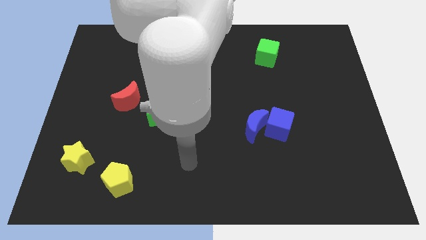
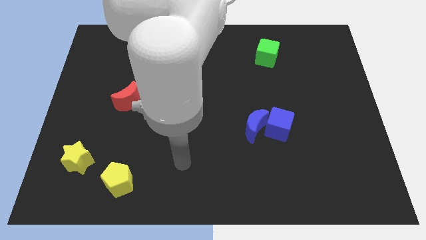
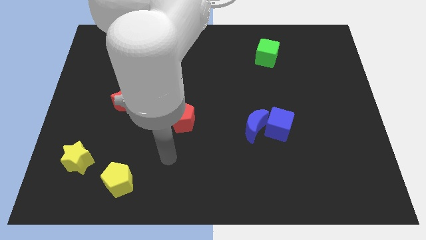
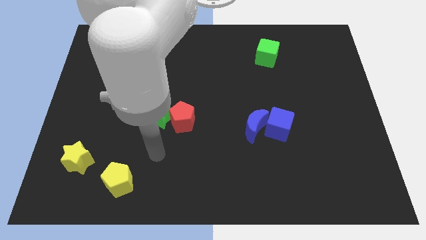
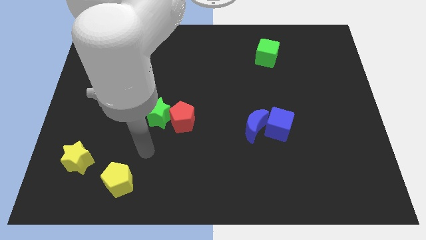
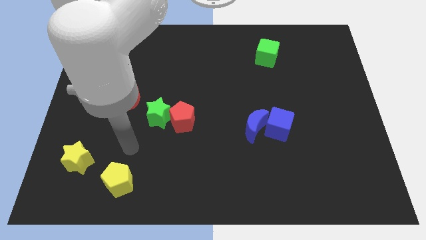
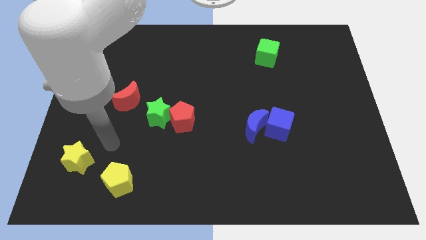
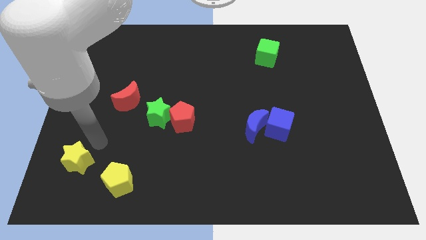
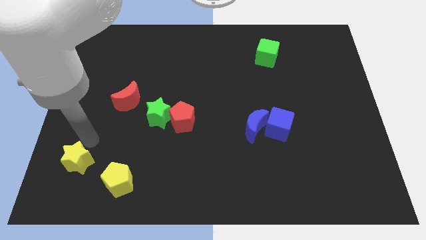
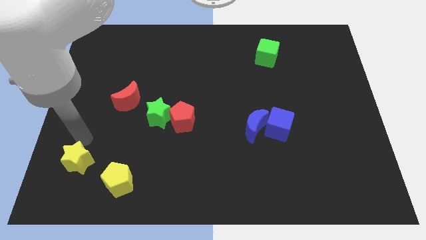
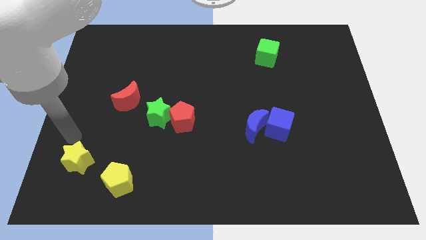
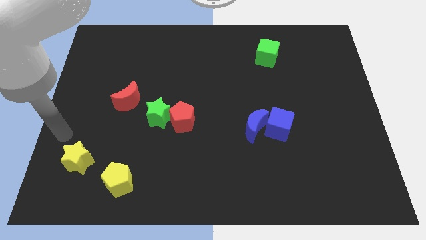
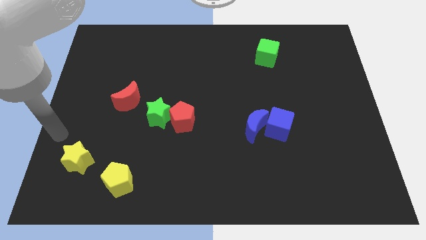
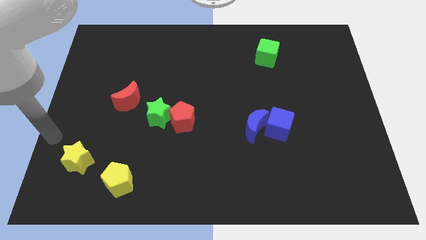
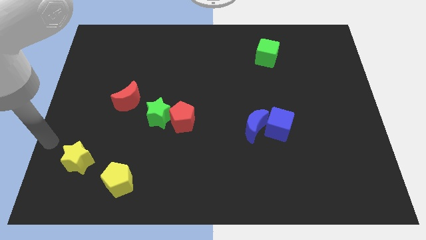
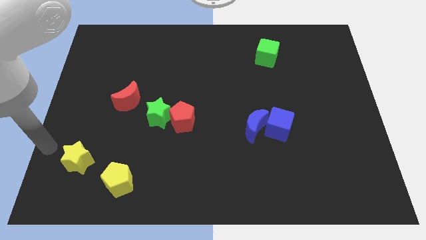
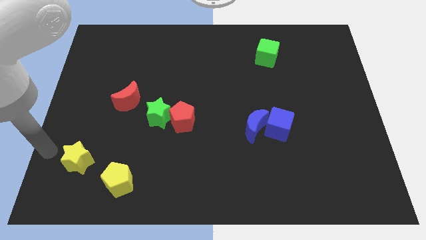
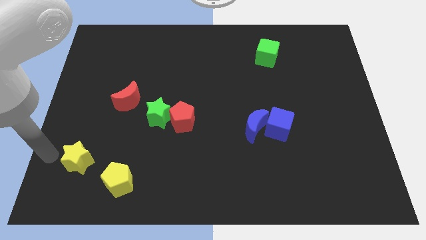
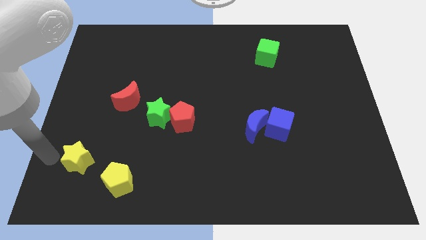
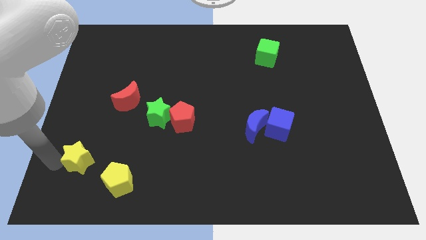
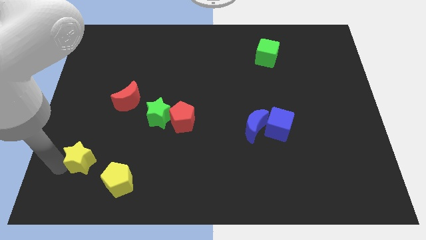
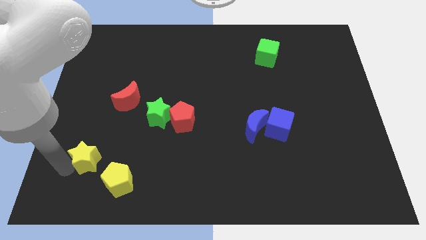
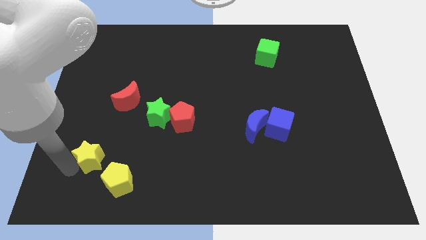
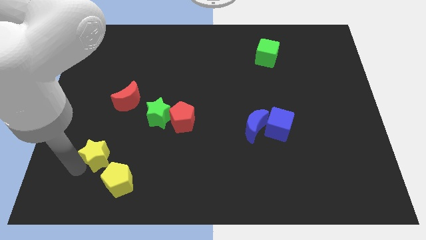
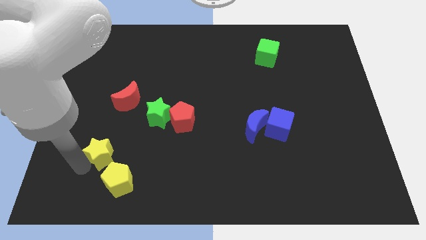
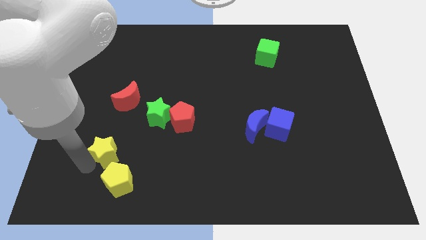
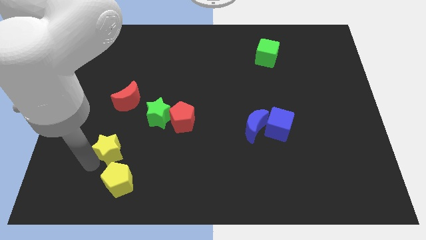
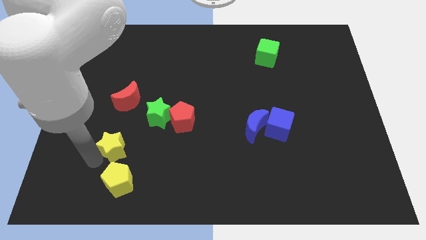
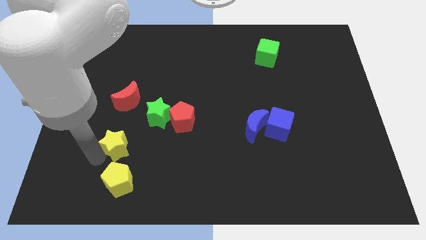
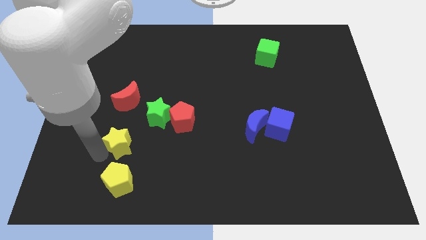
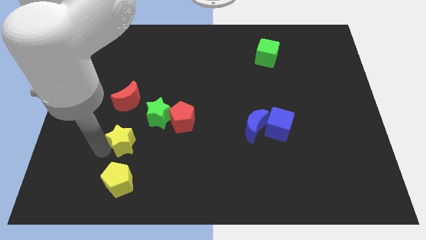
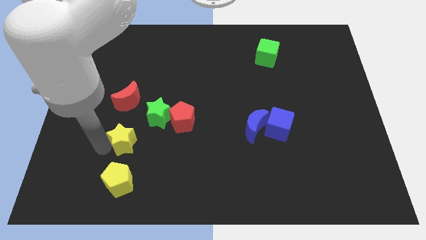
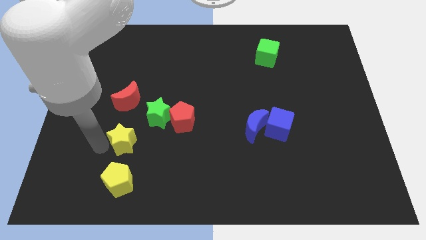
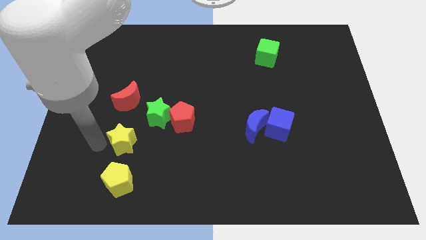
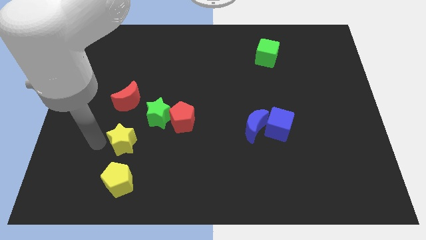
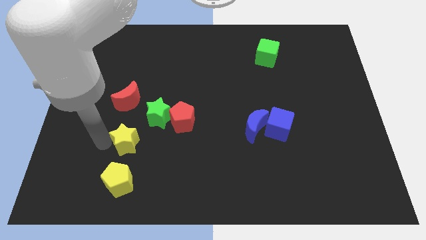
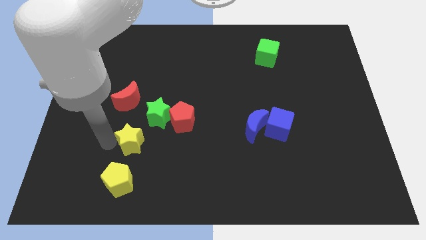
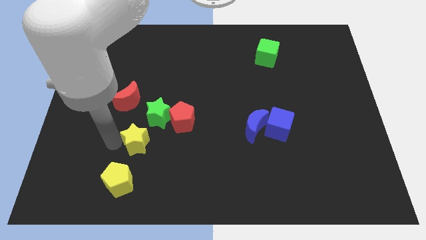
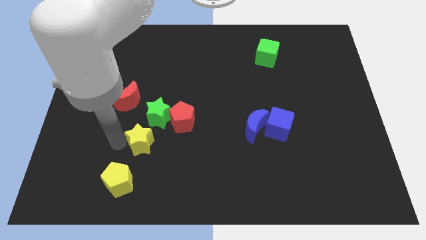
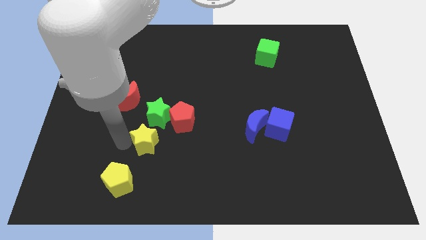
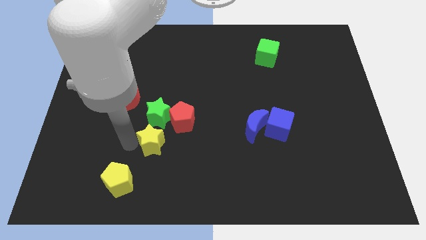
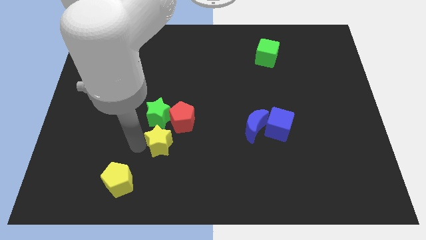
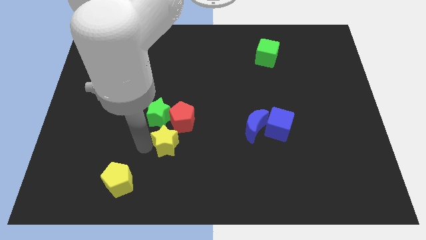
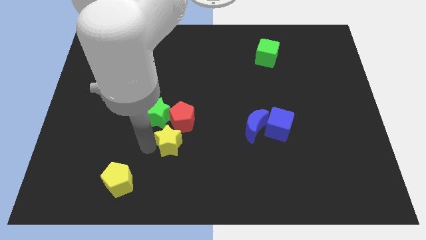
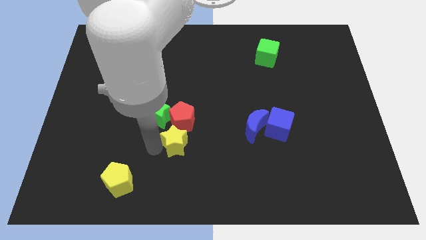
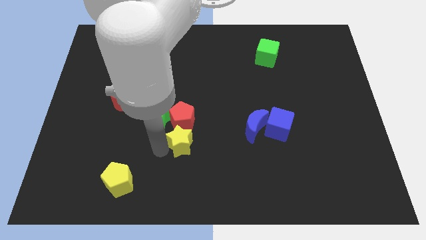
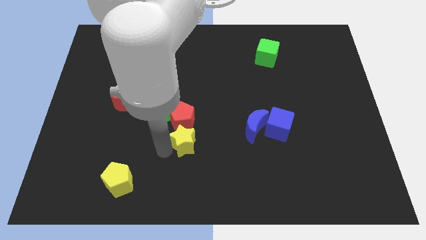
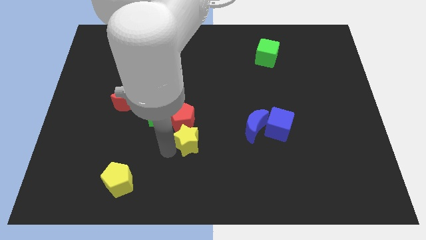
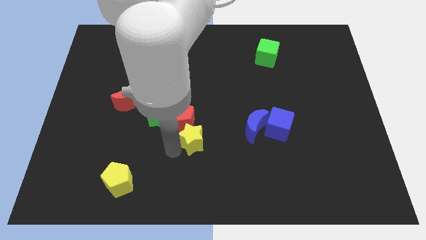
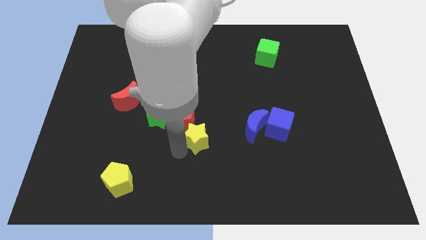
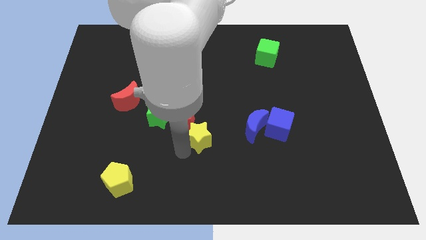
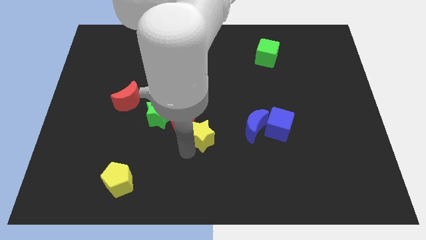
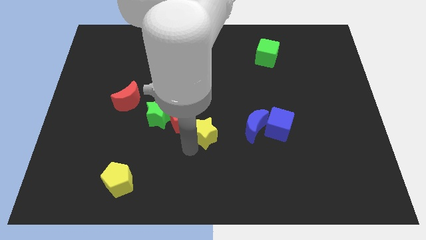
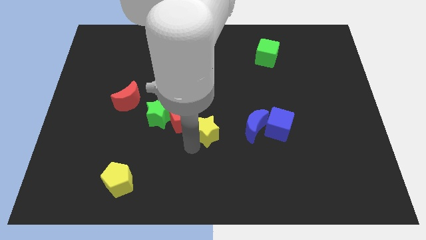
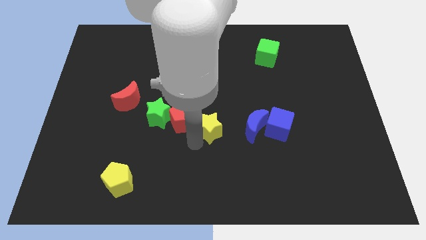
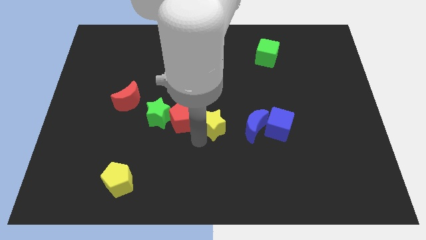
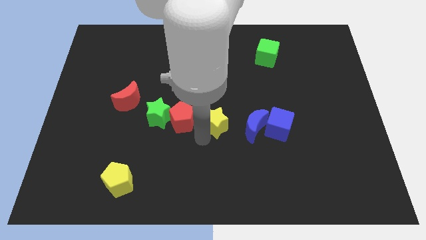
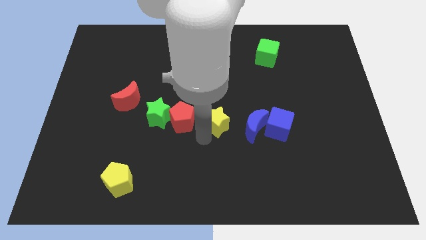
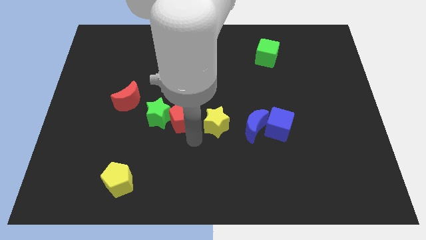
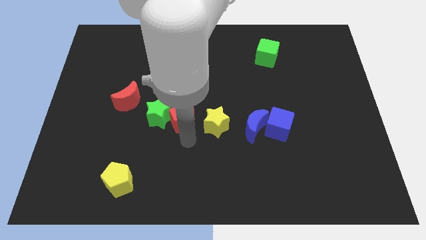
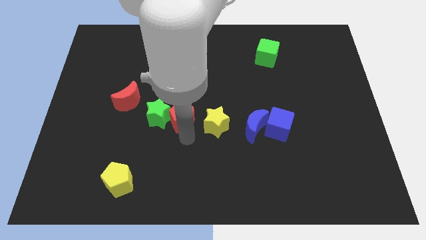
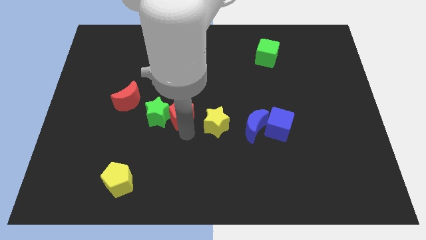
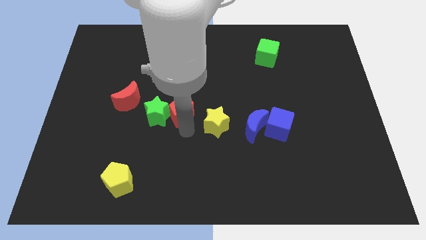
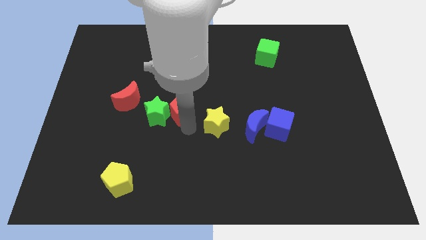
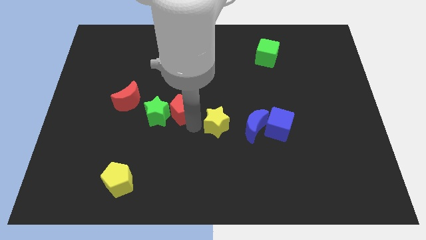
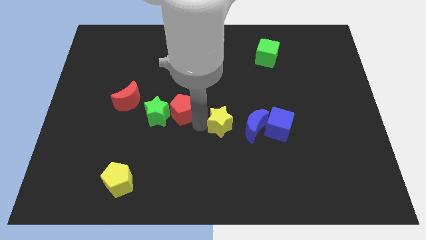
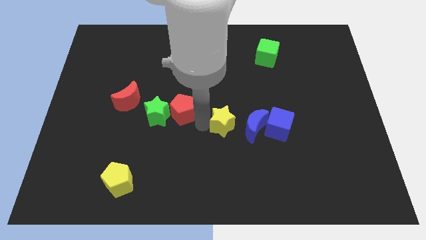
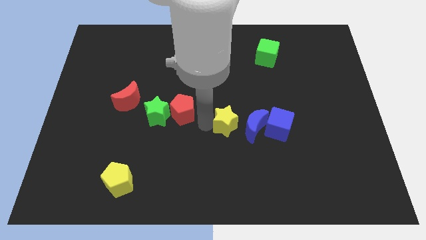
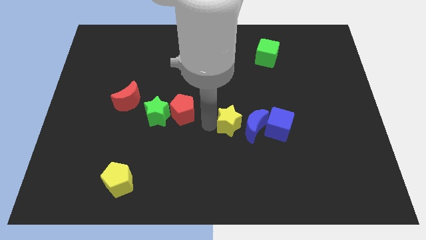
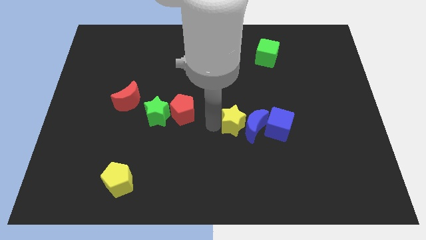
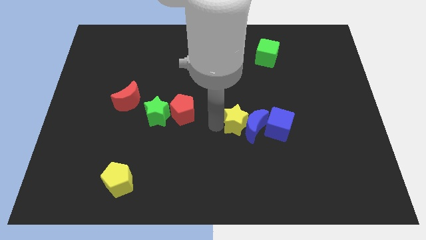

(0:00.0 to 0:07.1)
move the yellow star next to the blue moon

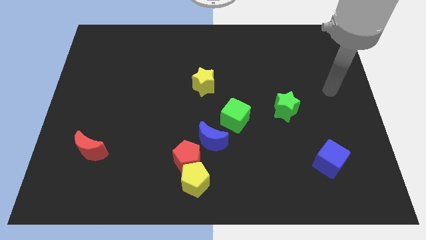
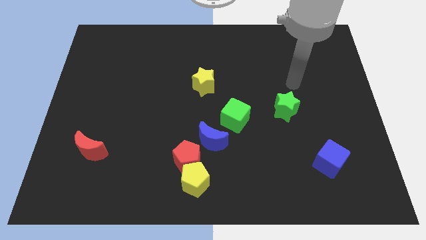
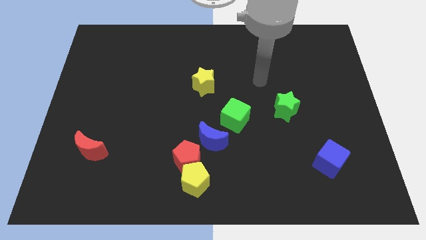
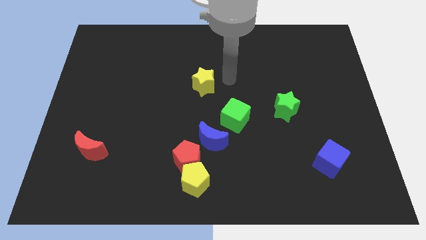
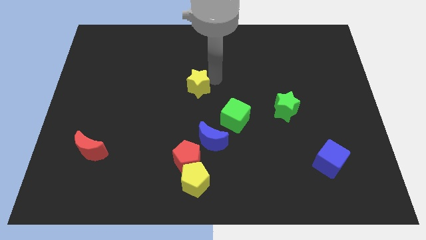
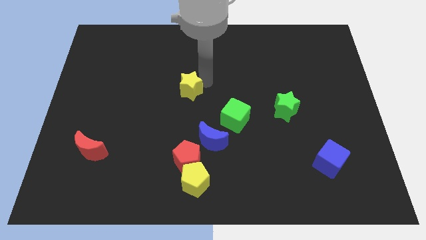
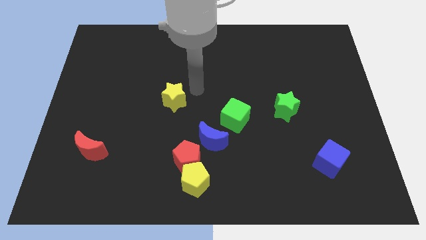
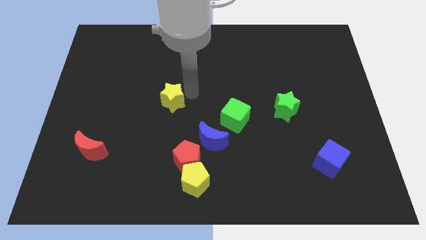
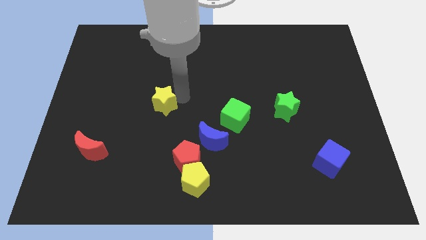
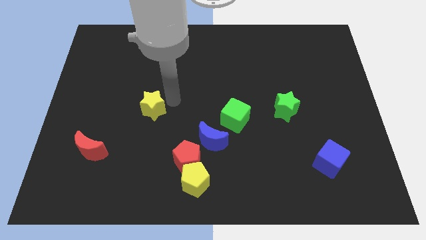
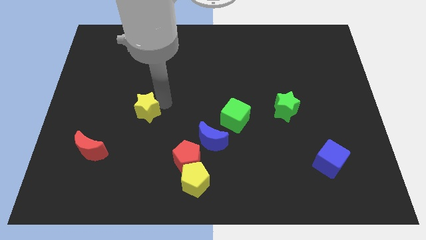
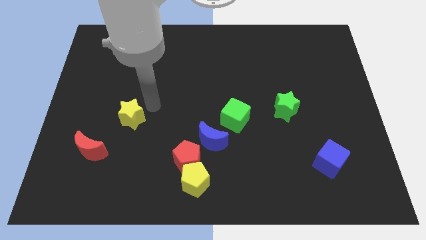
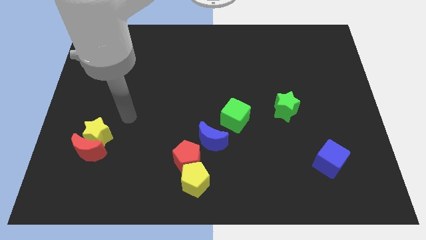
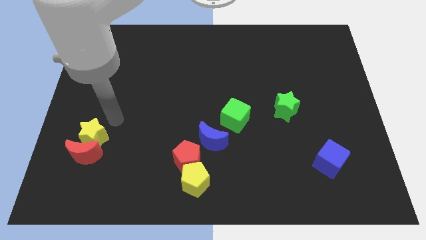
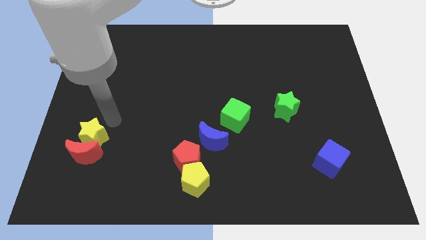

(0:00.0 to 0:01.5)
put the yellow star close to the red moon
